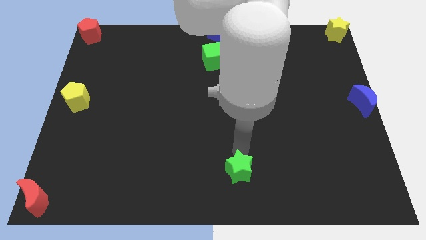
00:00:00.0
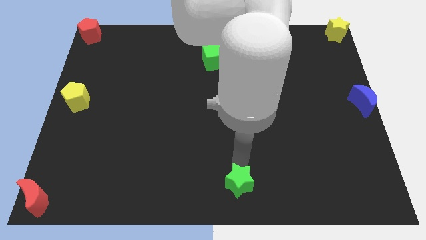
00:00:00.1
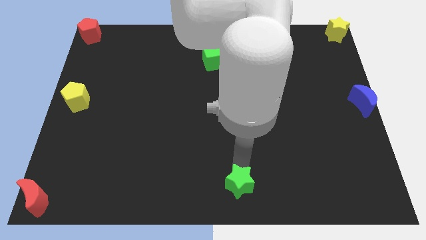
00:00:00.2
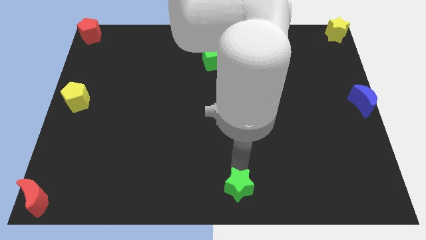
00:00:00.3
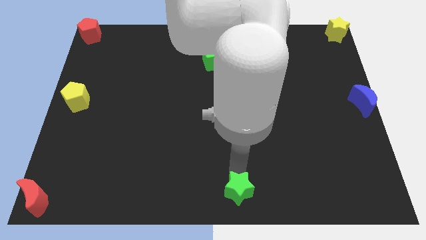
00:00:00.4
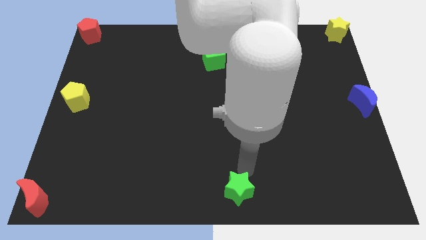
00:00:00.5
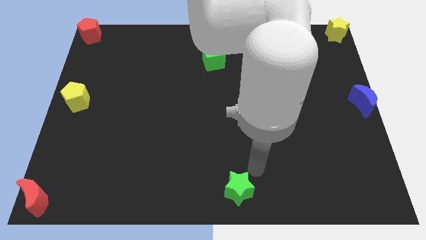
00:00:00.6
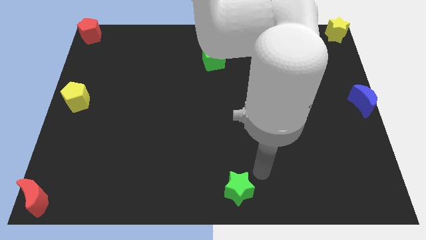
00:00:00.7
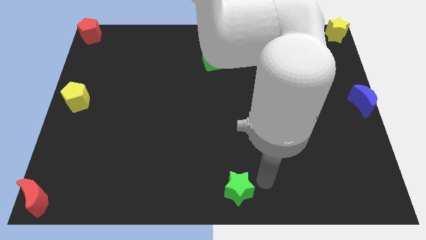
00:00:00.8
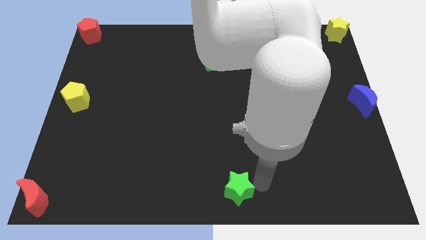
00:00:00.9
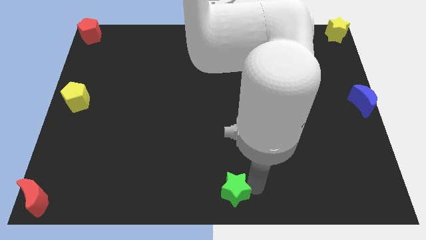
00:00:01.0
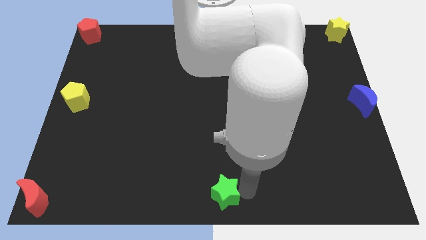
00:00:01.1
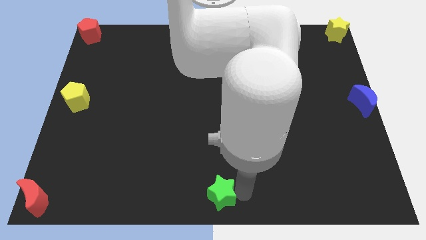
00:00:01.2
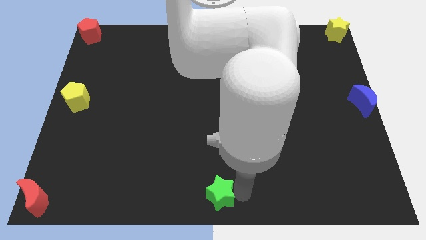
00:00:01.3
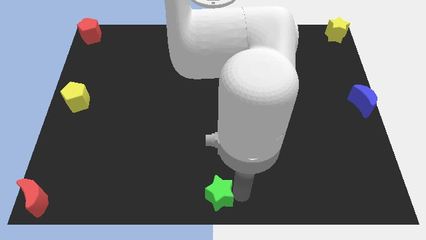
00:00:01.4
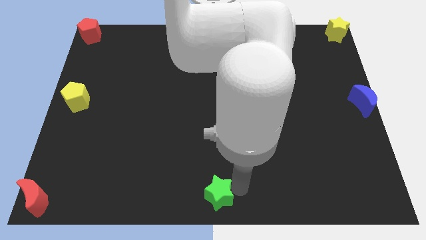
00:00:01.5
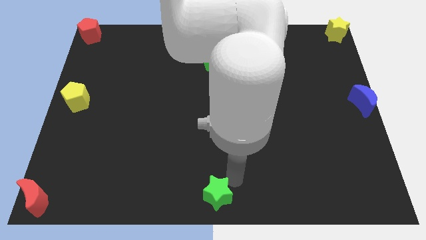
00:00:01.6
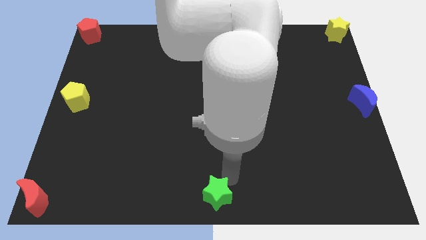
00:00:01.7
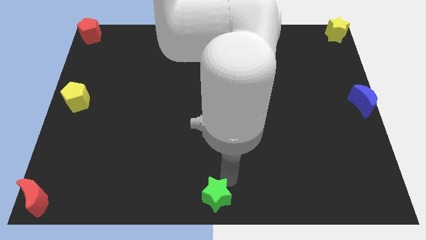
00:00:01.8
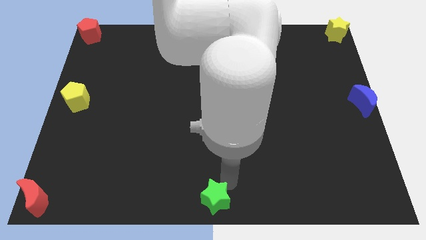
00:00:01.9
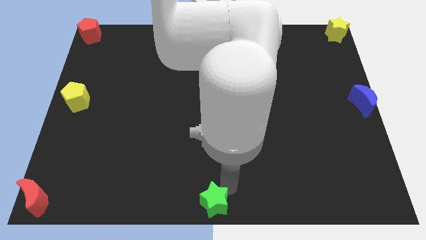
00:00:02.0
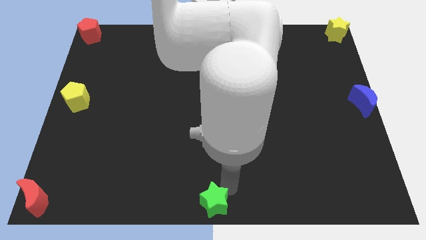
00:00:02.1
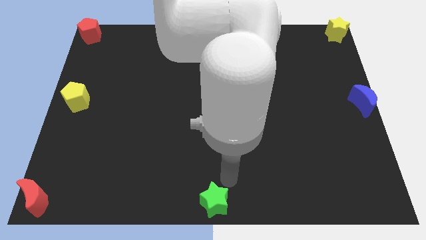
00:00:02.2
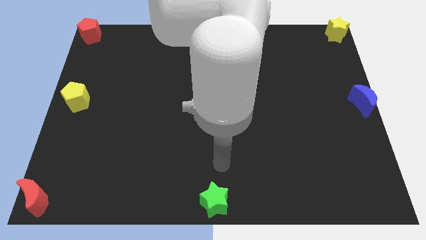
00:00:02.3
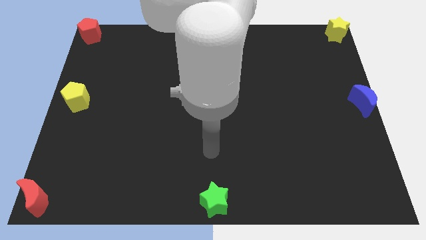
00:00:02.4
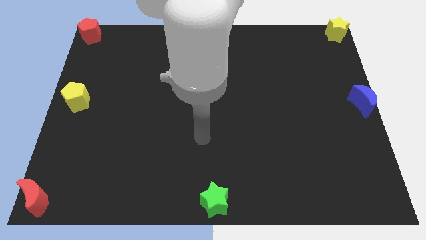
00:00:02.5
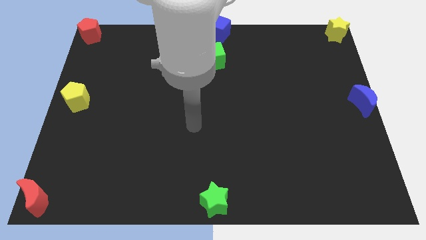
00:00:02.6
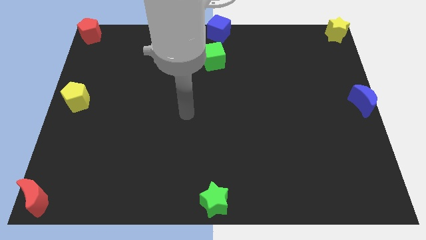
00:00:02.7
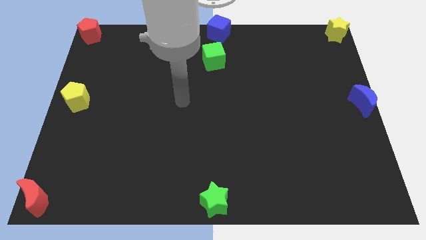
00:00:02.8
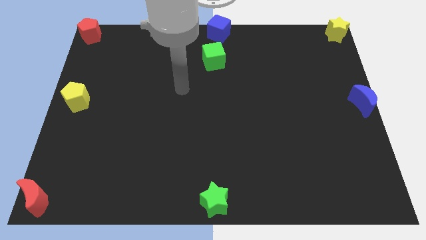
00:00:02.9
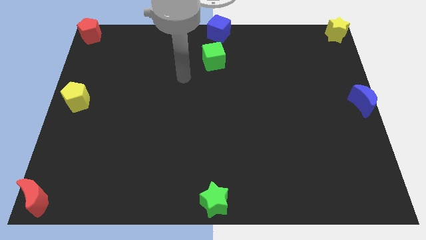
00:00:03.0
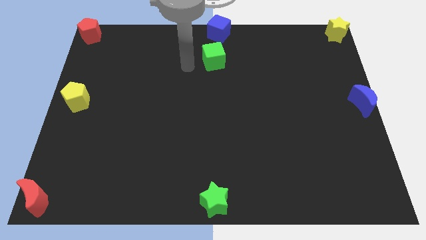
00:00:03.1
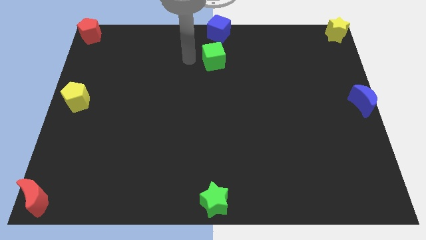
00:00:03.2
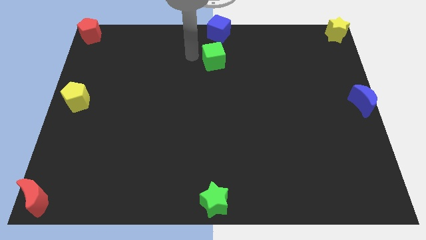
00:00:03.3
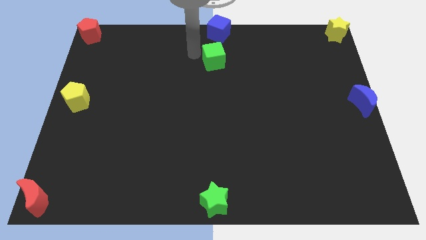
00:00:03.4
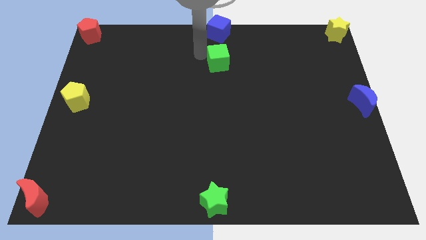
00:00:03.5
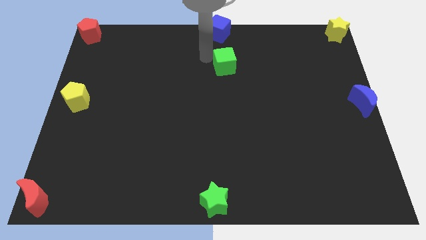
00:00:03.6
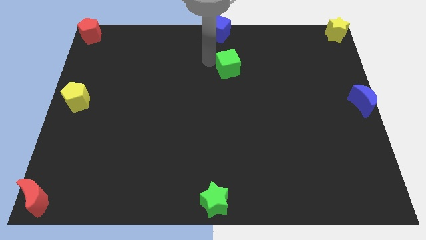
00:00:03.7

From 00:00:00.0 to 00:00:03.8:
place the green star to the bottom center

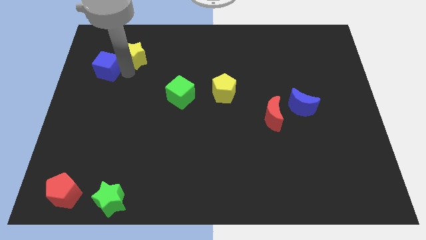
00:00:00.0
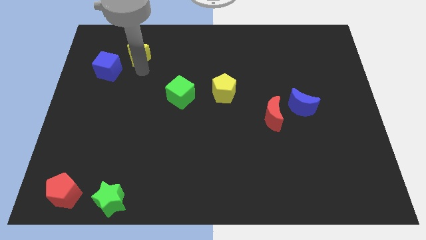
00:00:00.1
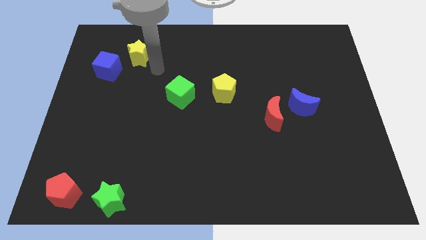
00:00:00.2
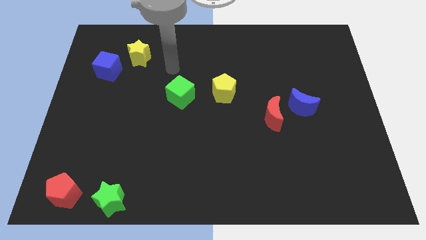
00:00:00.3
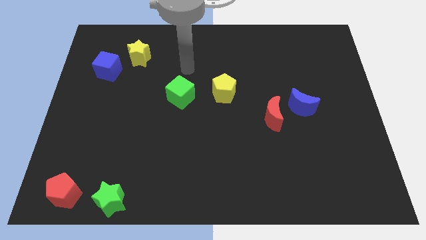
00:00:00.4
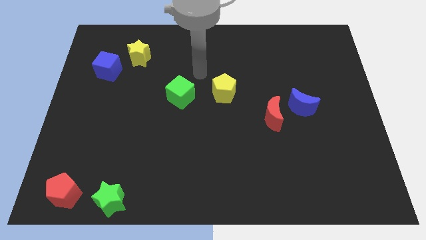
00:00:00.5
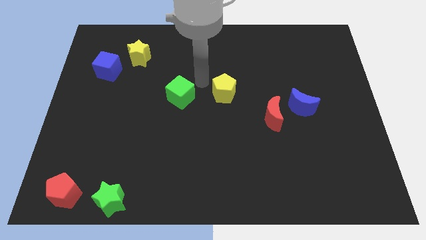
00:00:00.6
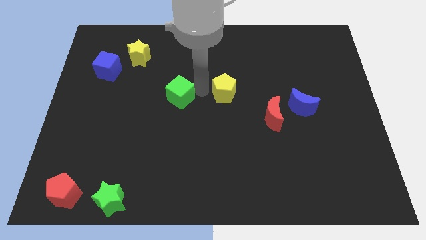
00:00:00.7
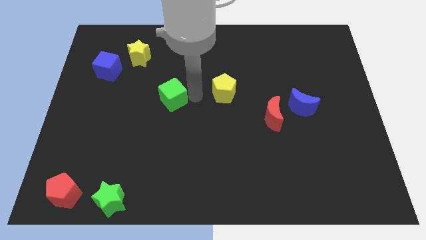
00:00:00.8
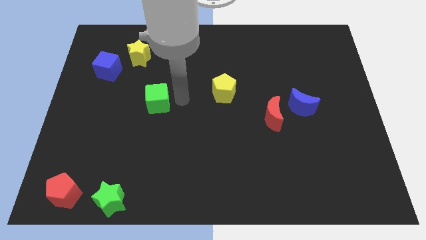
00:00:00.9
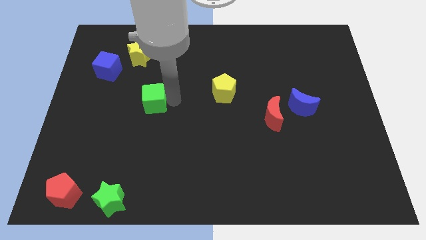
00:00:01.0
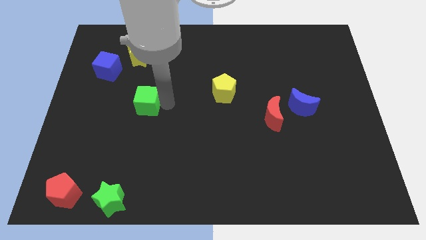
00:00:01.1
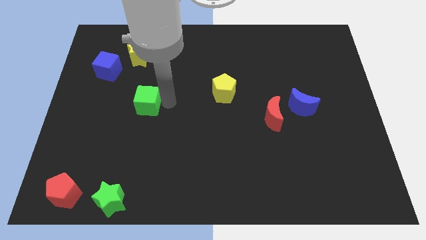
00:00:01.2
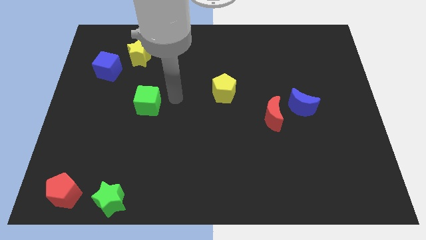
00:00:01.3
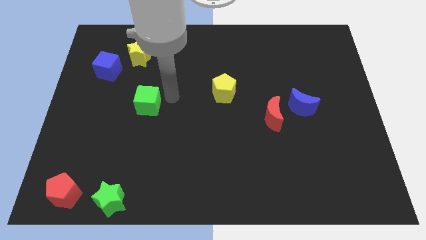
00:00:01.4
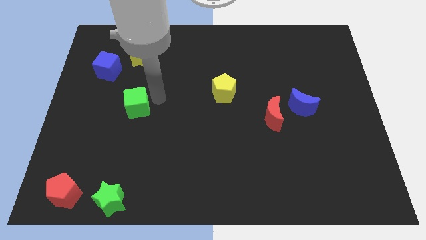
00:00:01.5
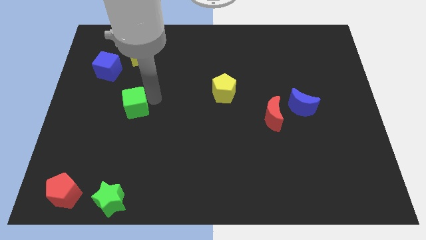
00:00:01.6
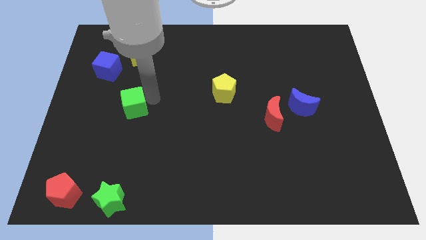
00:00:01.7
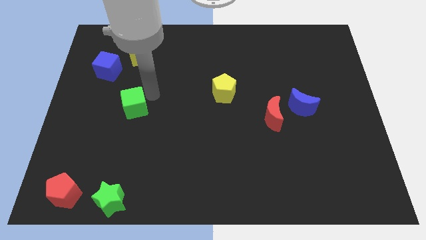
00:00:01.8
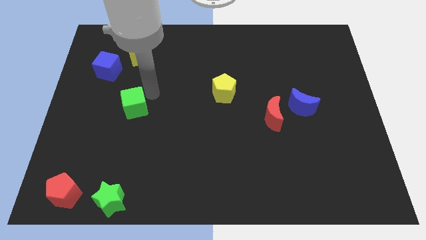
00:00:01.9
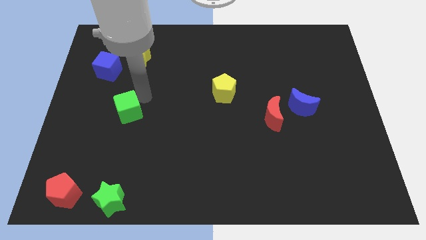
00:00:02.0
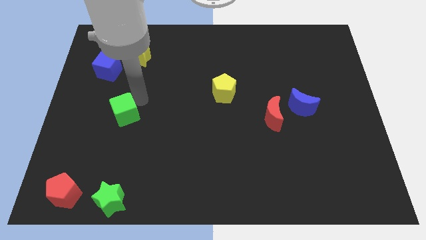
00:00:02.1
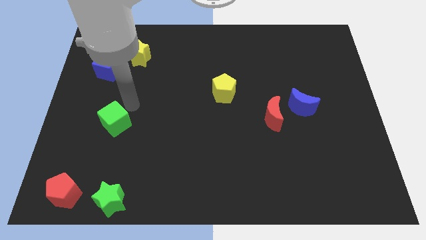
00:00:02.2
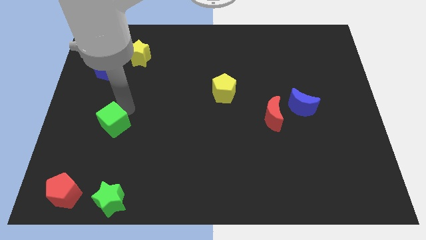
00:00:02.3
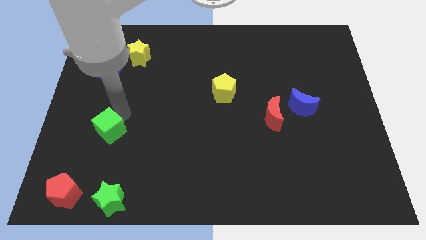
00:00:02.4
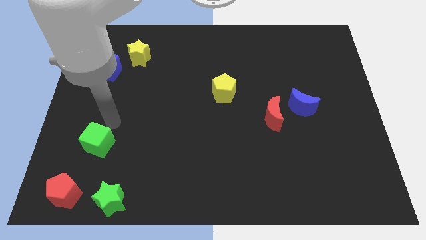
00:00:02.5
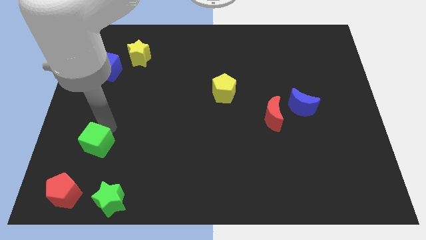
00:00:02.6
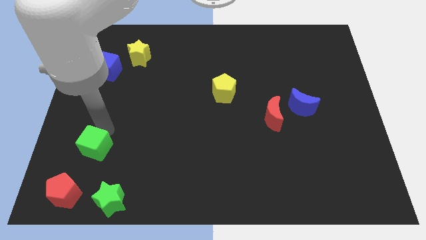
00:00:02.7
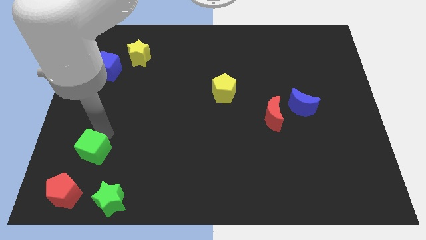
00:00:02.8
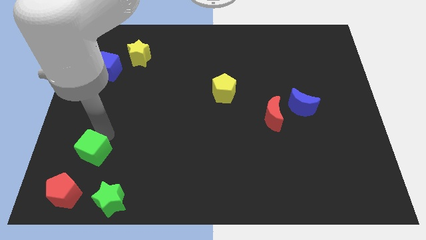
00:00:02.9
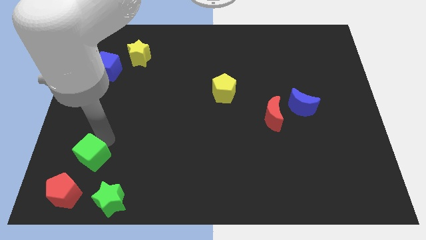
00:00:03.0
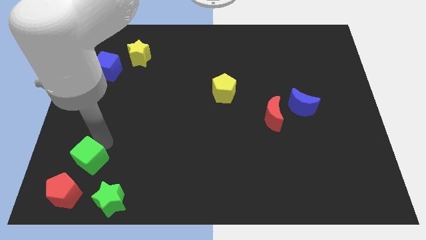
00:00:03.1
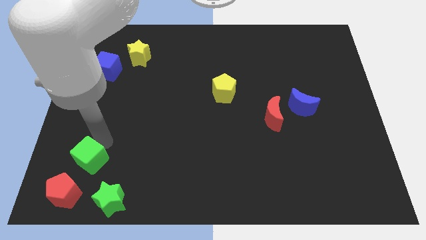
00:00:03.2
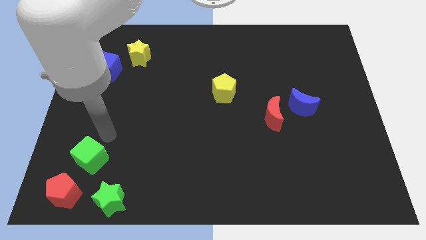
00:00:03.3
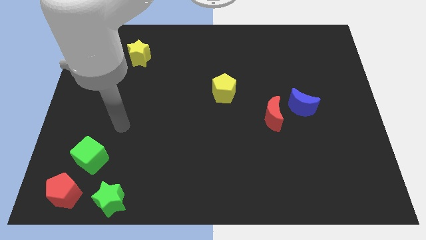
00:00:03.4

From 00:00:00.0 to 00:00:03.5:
move the green cube to the top left of the green star

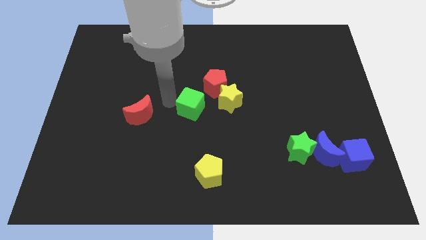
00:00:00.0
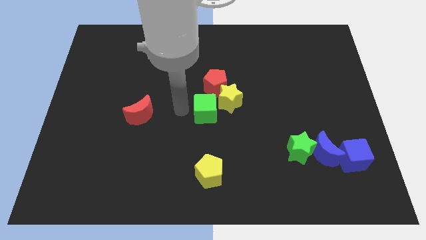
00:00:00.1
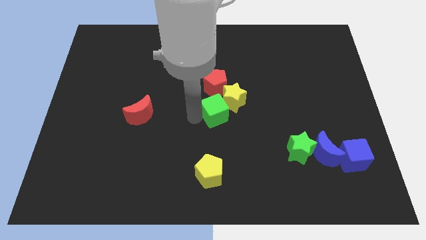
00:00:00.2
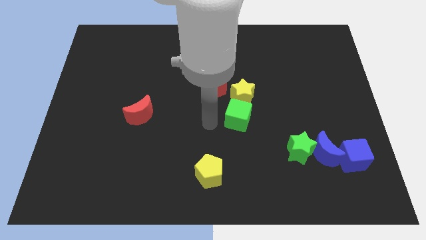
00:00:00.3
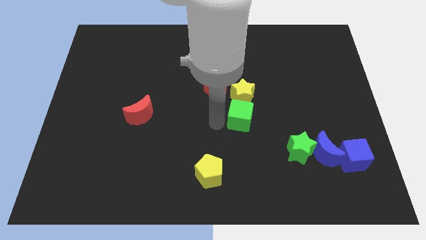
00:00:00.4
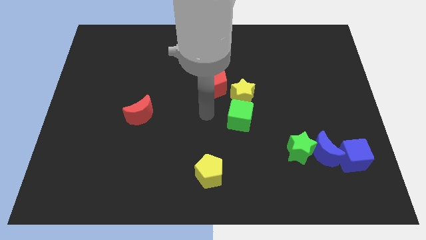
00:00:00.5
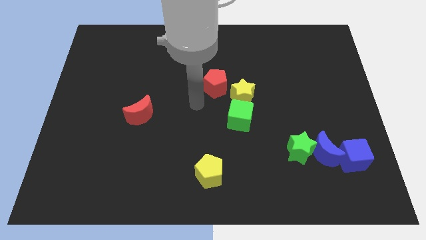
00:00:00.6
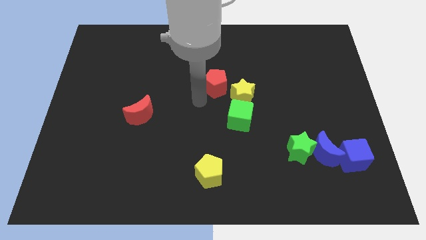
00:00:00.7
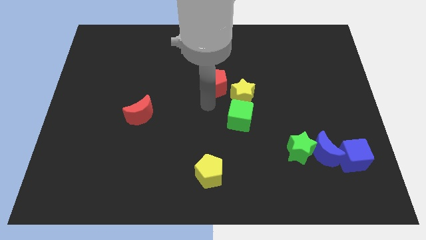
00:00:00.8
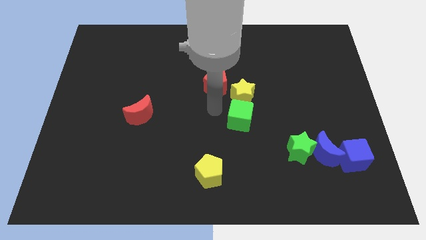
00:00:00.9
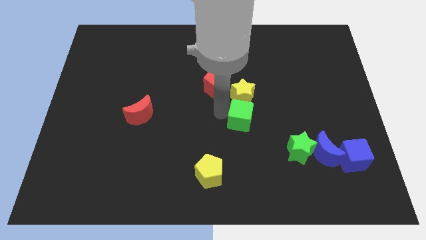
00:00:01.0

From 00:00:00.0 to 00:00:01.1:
place the green cube below yellow star

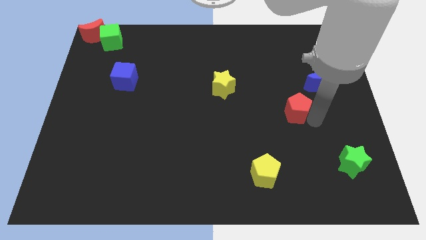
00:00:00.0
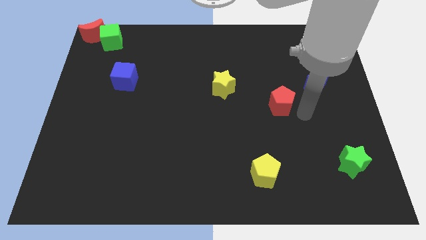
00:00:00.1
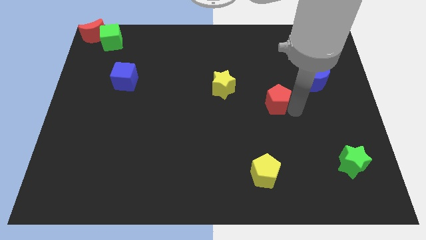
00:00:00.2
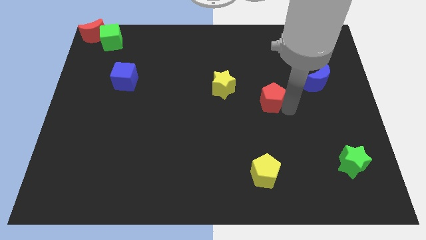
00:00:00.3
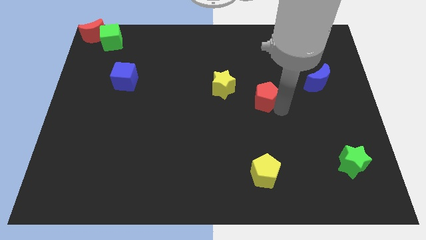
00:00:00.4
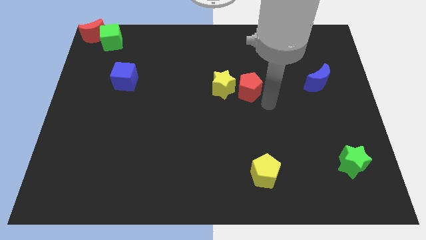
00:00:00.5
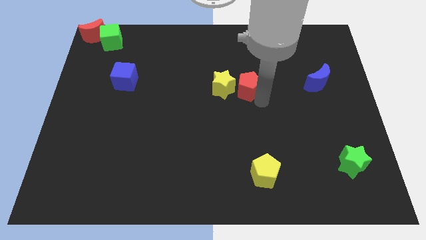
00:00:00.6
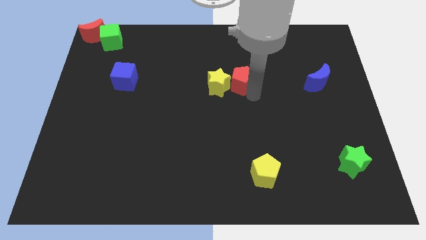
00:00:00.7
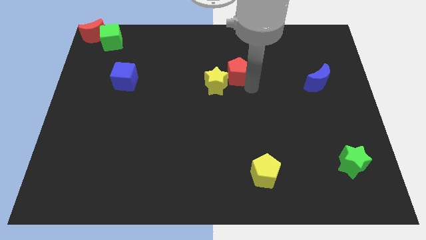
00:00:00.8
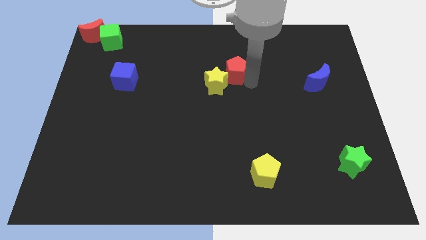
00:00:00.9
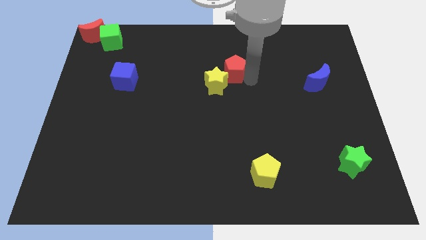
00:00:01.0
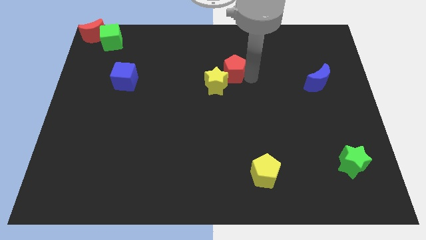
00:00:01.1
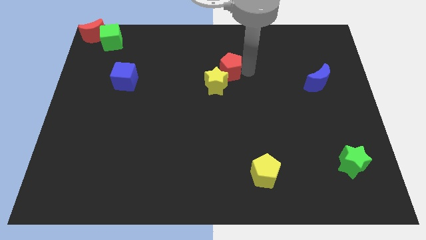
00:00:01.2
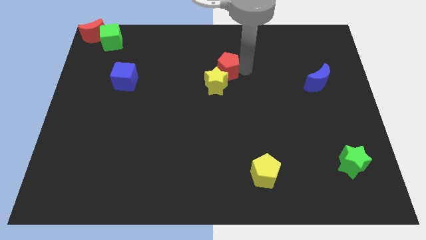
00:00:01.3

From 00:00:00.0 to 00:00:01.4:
push the red pentagon into the yellow star
